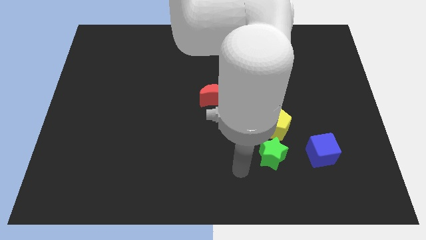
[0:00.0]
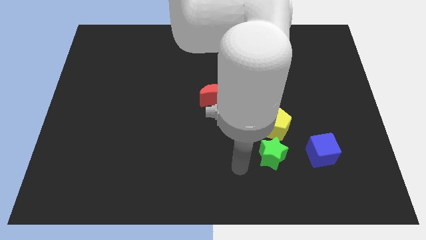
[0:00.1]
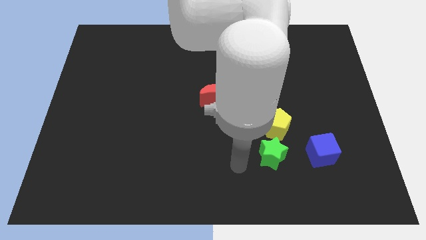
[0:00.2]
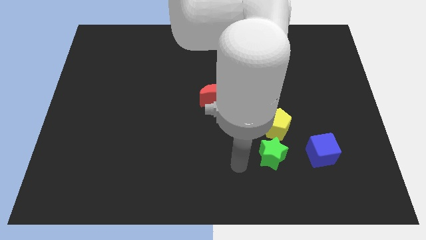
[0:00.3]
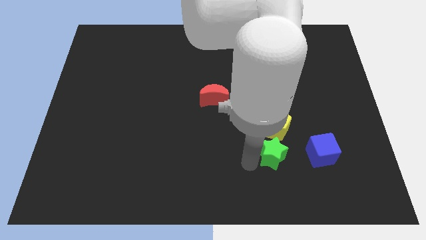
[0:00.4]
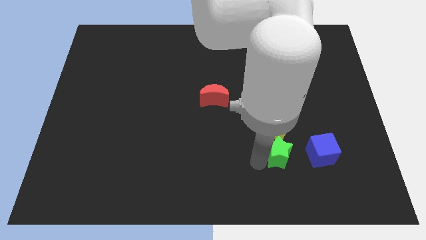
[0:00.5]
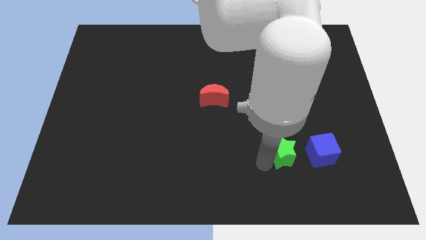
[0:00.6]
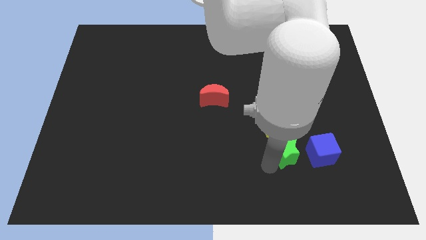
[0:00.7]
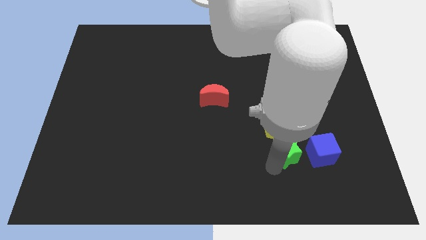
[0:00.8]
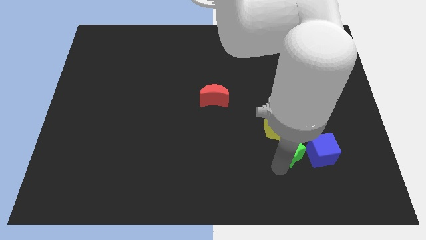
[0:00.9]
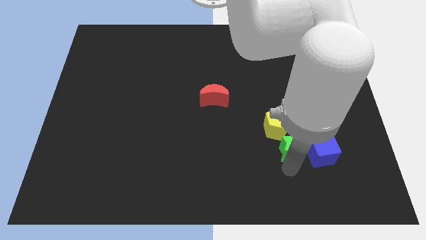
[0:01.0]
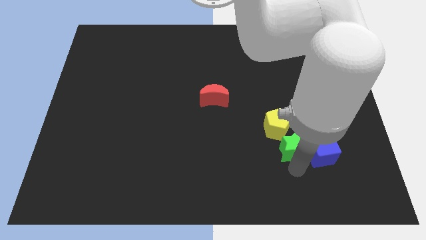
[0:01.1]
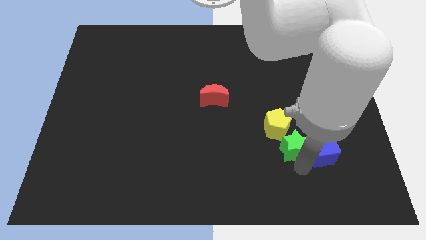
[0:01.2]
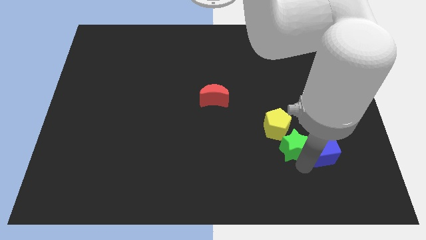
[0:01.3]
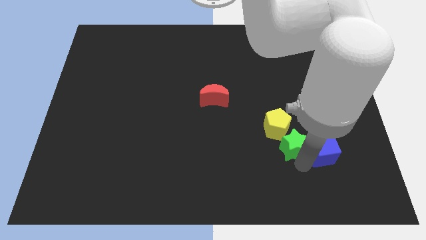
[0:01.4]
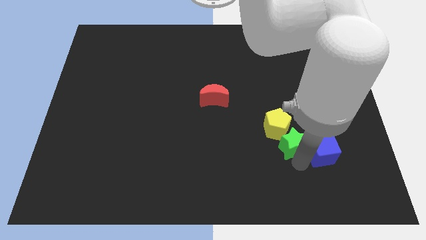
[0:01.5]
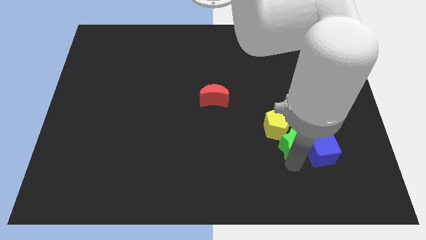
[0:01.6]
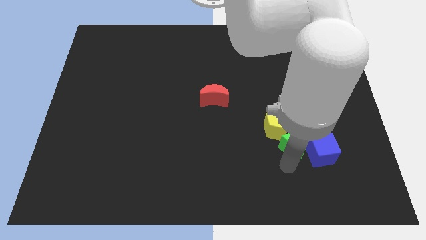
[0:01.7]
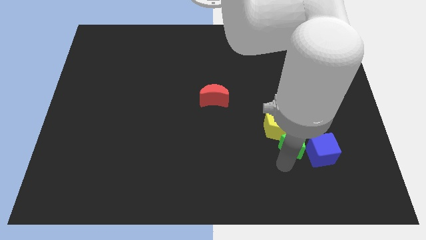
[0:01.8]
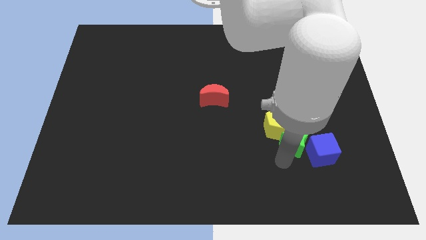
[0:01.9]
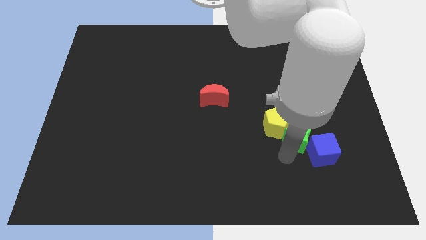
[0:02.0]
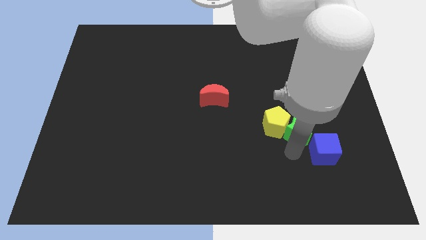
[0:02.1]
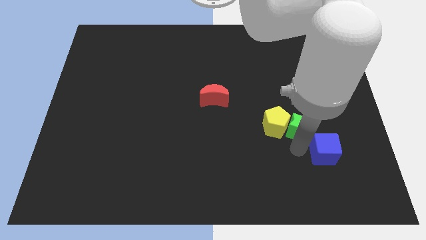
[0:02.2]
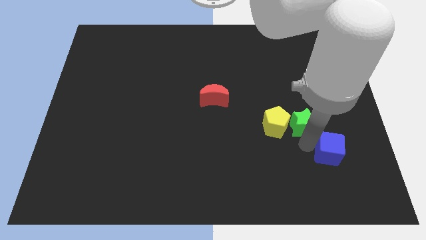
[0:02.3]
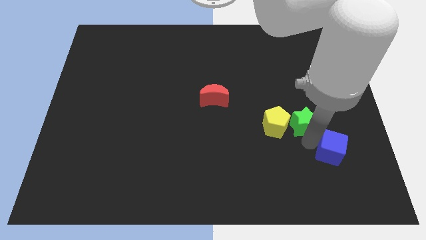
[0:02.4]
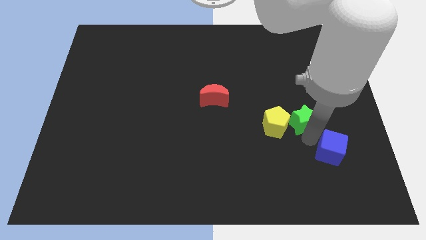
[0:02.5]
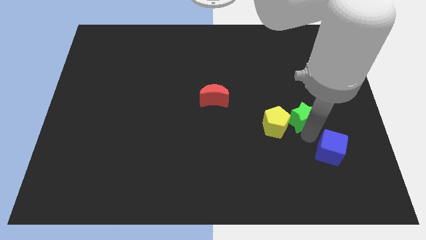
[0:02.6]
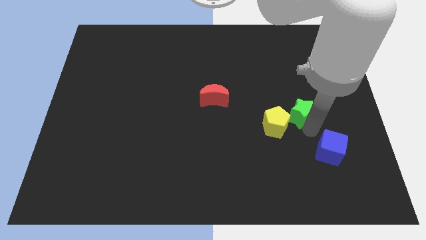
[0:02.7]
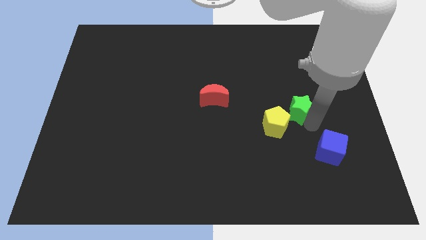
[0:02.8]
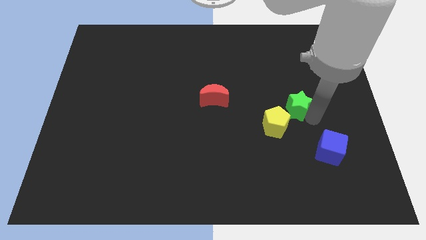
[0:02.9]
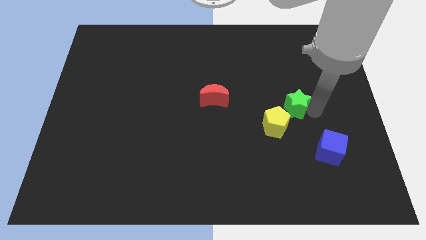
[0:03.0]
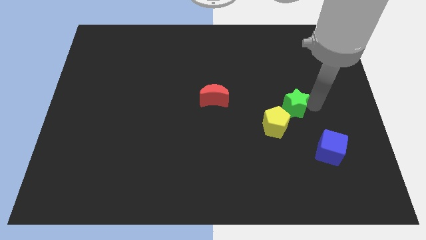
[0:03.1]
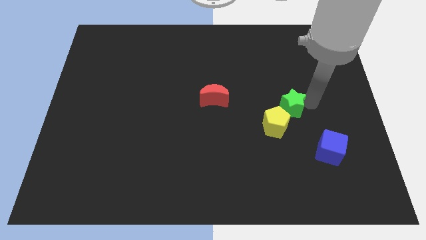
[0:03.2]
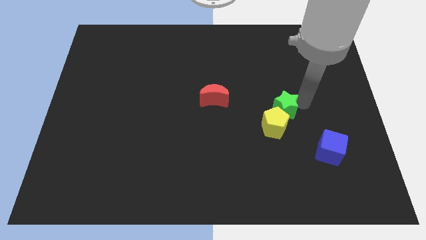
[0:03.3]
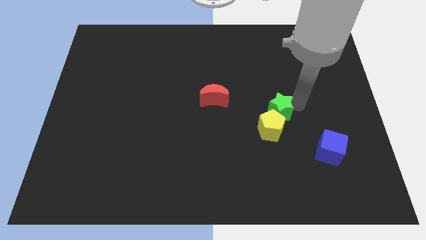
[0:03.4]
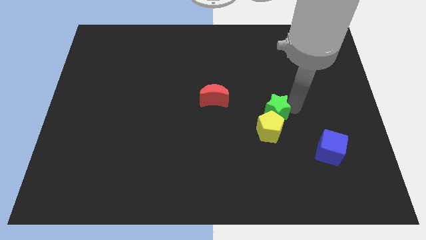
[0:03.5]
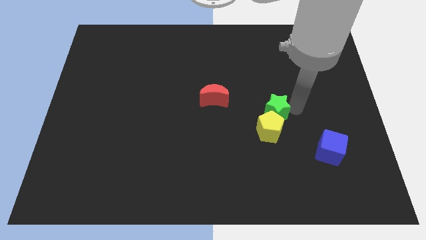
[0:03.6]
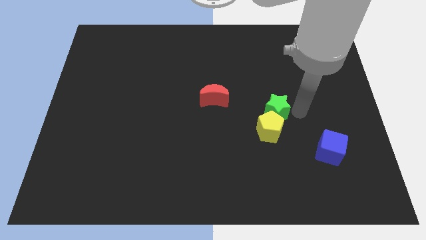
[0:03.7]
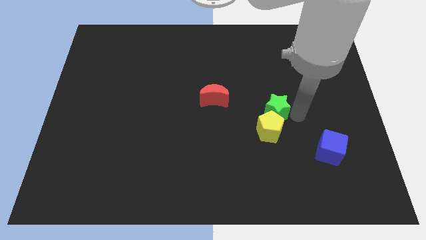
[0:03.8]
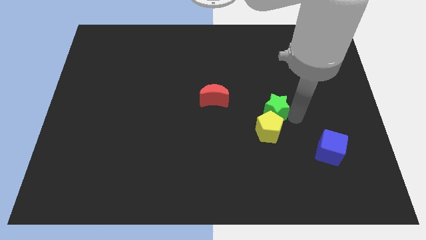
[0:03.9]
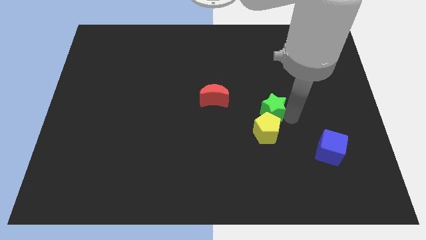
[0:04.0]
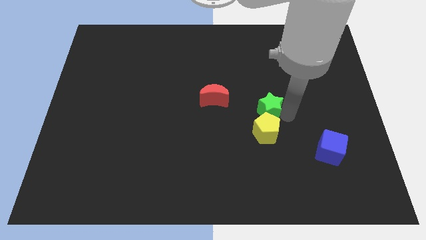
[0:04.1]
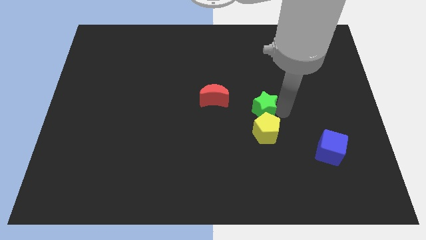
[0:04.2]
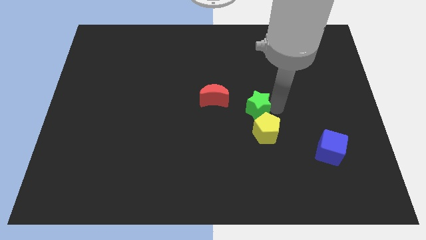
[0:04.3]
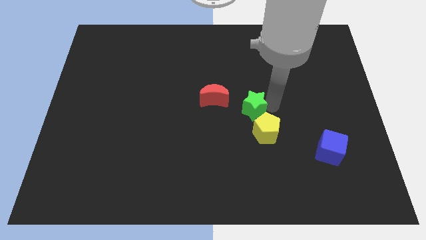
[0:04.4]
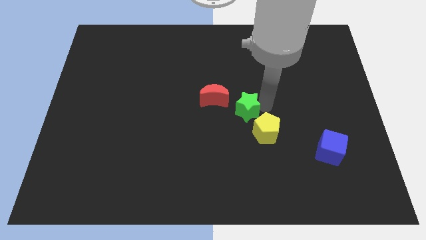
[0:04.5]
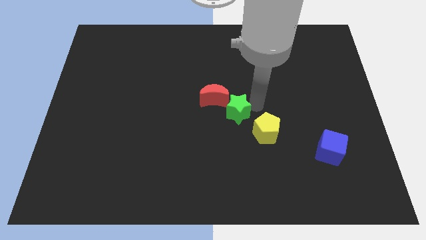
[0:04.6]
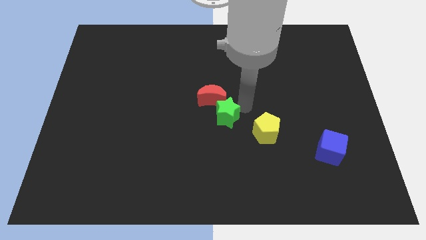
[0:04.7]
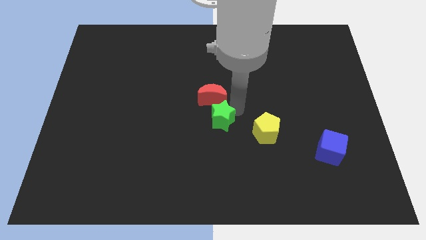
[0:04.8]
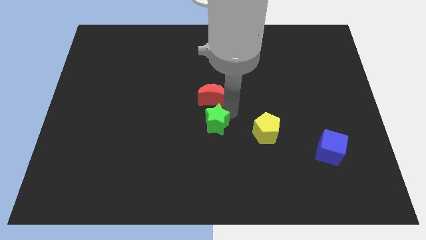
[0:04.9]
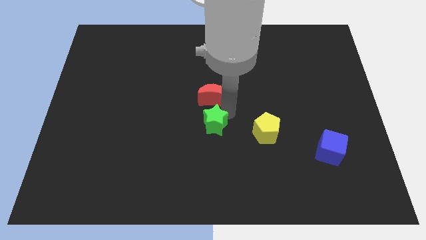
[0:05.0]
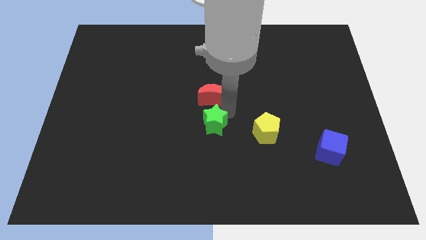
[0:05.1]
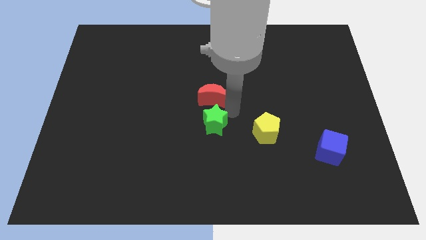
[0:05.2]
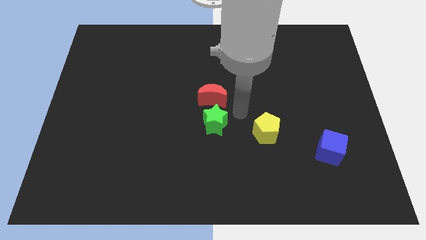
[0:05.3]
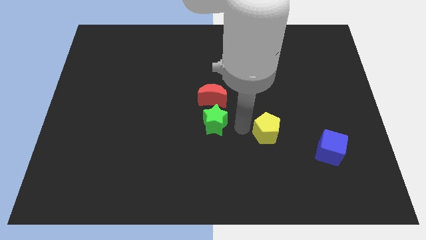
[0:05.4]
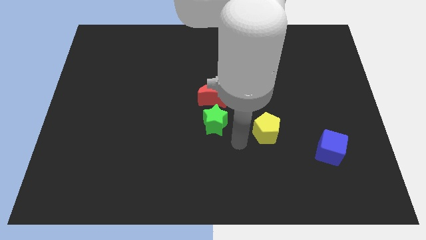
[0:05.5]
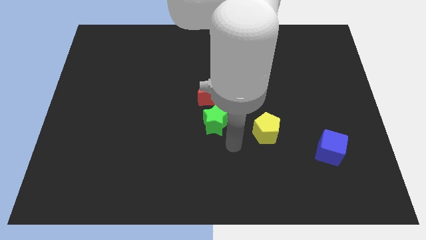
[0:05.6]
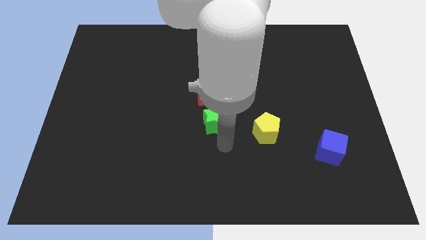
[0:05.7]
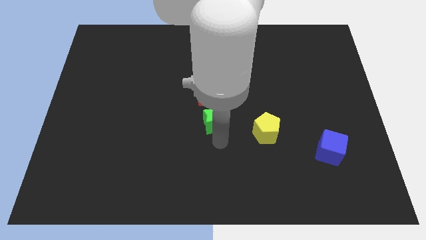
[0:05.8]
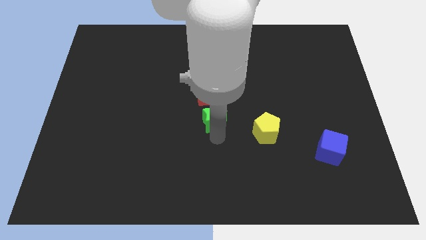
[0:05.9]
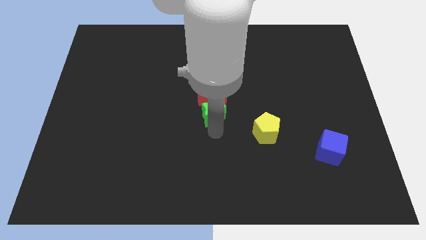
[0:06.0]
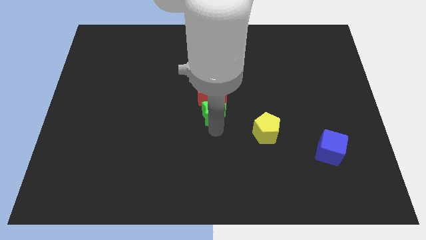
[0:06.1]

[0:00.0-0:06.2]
push the green block next to the red moon

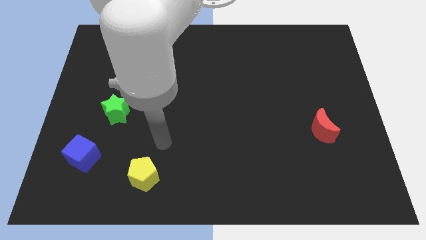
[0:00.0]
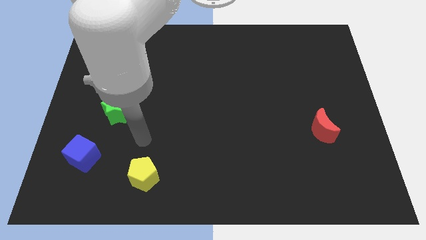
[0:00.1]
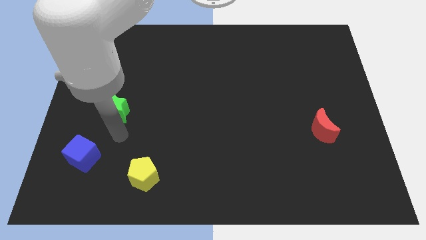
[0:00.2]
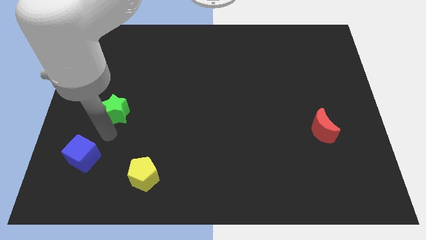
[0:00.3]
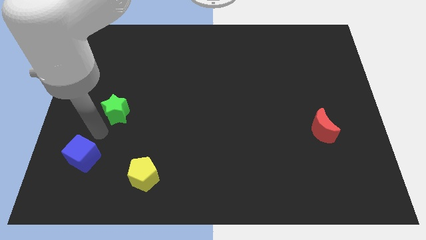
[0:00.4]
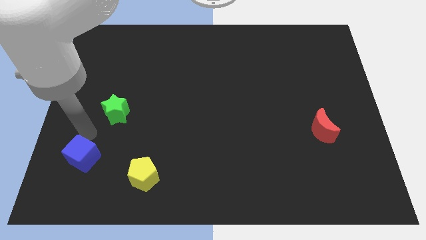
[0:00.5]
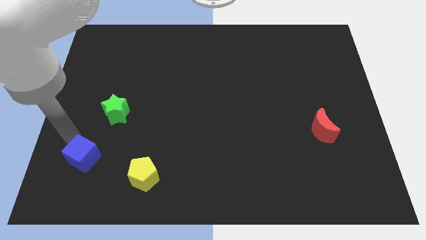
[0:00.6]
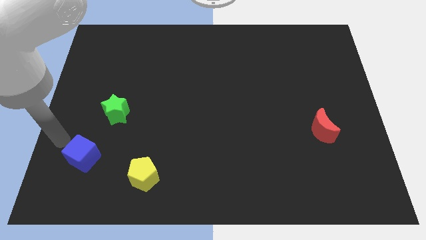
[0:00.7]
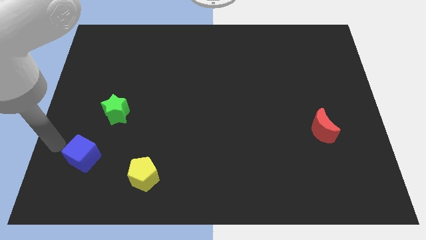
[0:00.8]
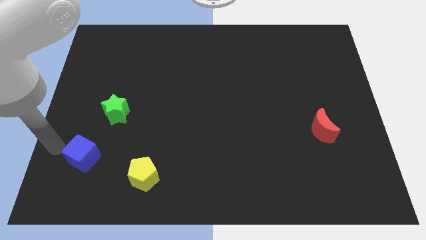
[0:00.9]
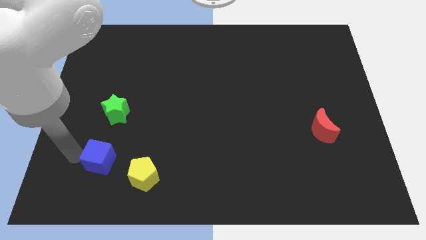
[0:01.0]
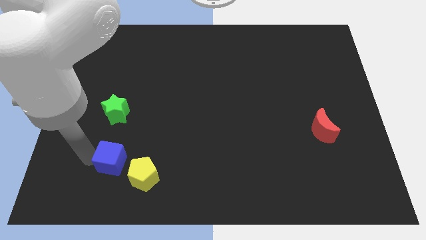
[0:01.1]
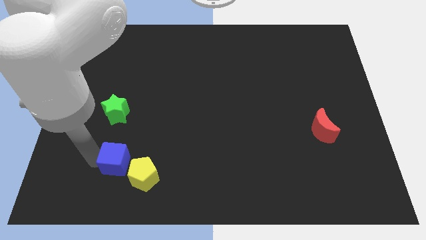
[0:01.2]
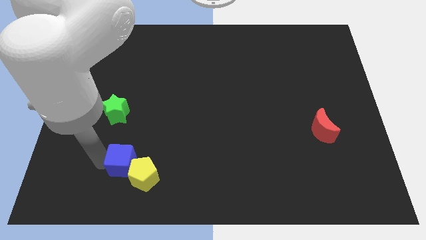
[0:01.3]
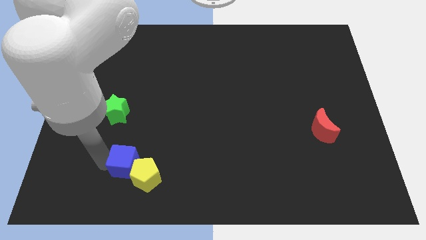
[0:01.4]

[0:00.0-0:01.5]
push the blue cube next to the pentagon

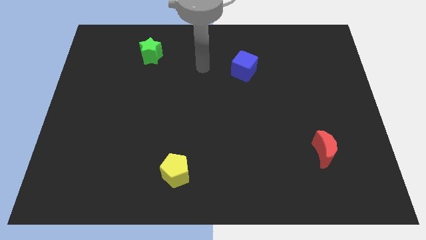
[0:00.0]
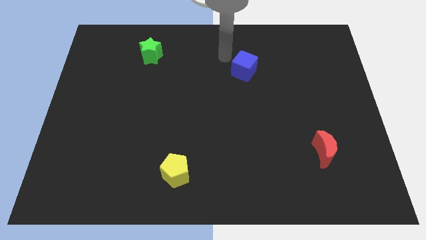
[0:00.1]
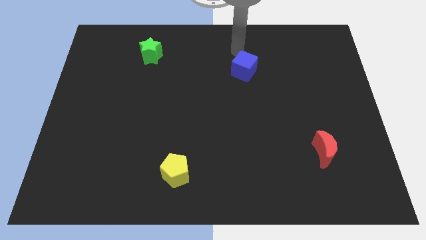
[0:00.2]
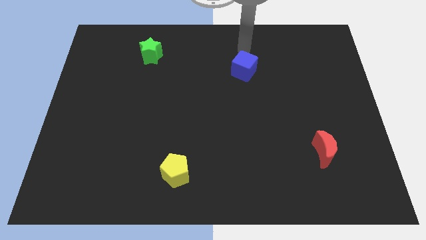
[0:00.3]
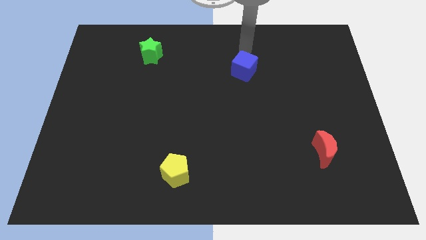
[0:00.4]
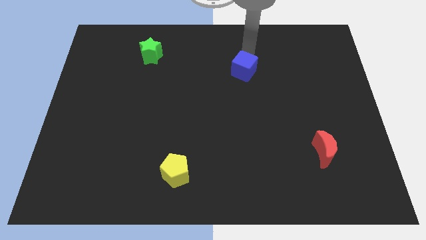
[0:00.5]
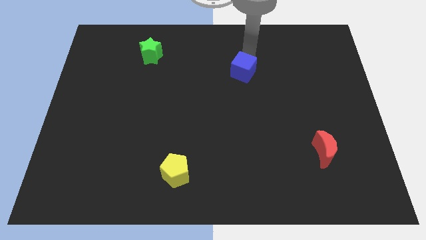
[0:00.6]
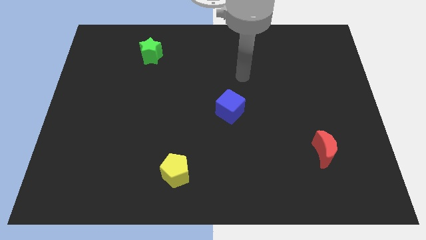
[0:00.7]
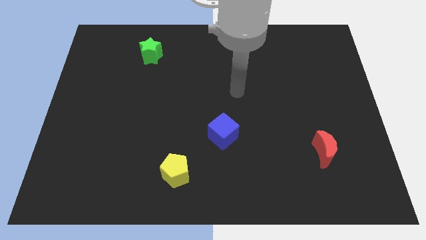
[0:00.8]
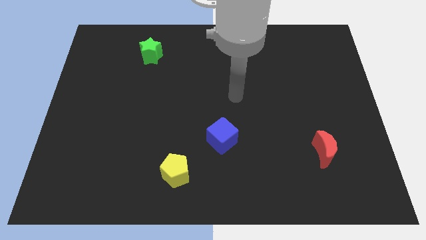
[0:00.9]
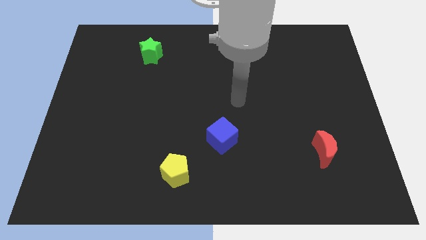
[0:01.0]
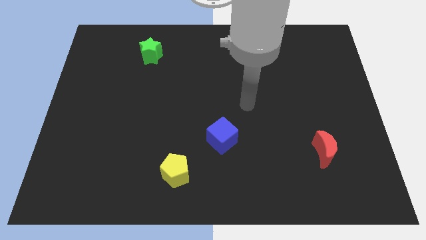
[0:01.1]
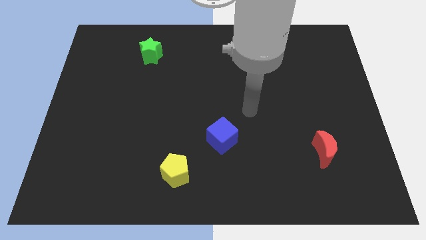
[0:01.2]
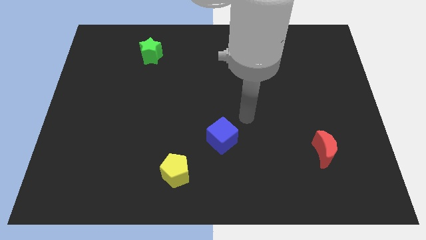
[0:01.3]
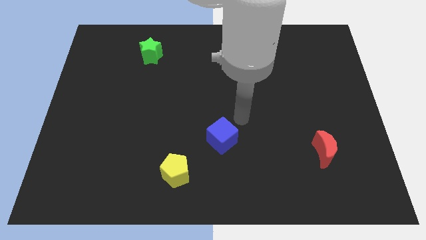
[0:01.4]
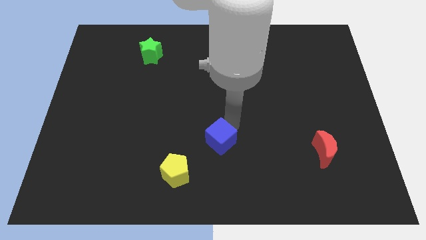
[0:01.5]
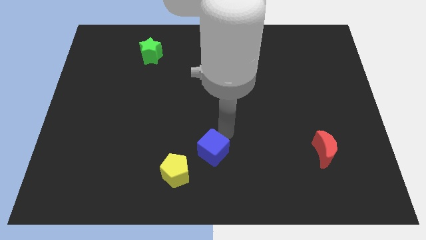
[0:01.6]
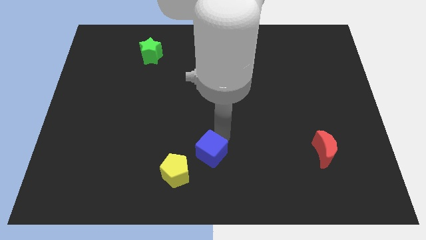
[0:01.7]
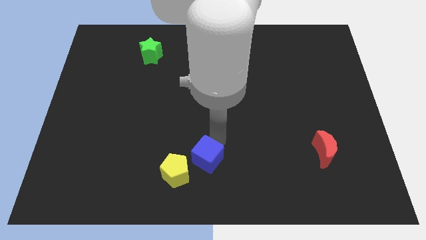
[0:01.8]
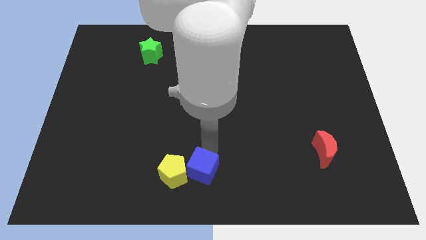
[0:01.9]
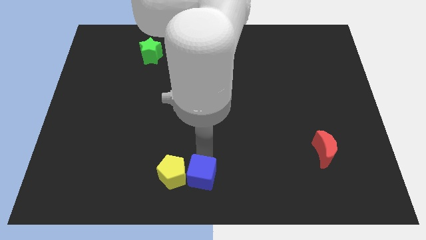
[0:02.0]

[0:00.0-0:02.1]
move the blue block close to the yellow block
